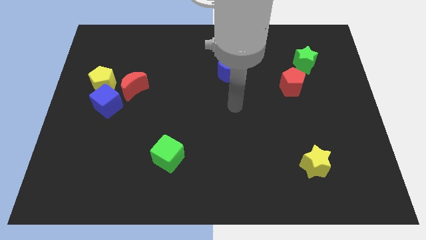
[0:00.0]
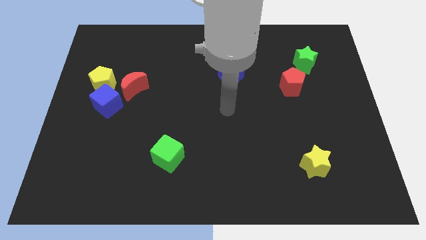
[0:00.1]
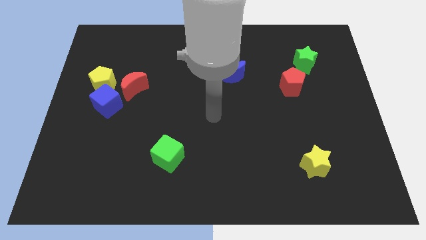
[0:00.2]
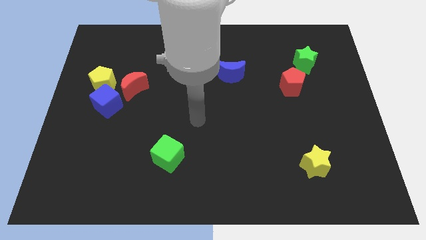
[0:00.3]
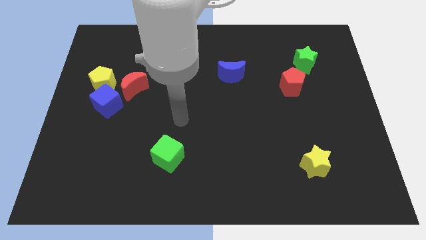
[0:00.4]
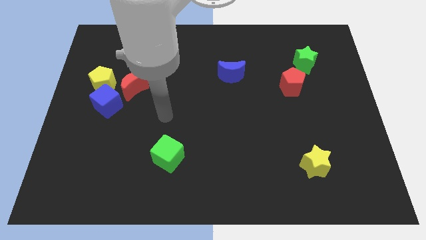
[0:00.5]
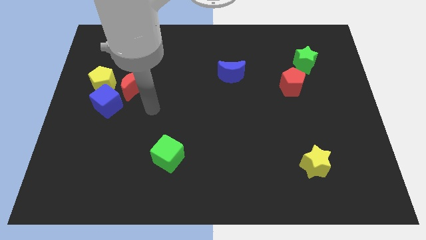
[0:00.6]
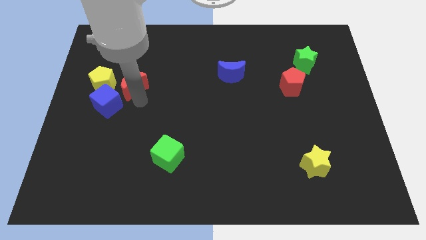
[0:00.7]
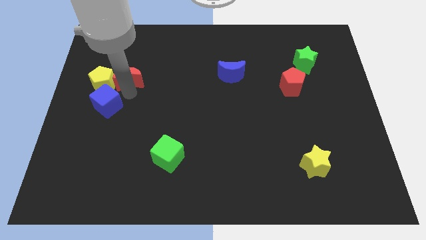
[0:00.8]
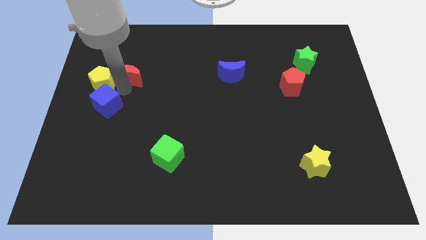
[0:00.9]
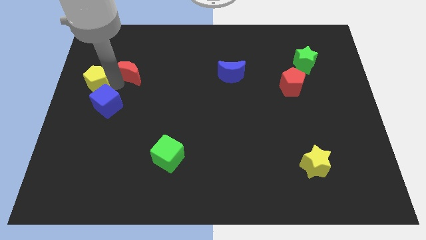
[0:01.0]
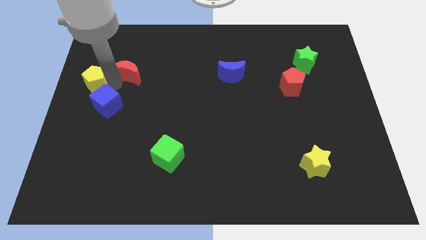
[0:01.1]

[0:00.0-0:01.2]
place your arm to the top left side of the blue cube

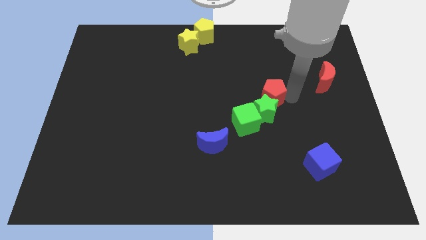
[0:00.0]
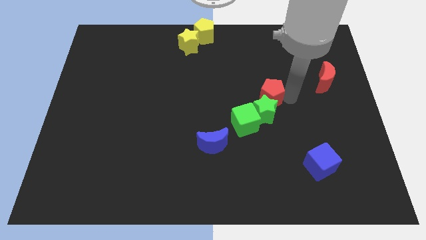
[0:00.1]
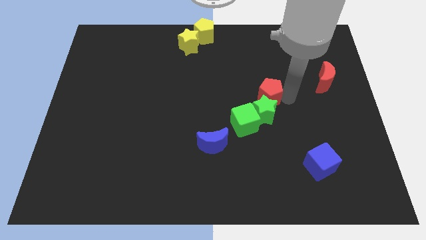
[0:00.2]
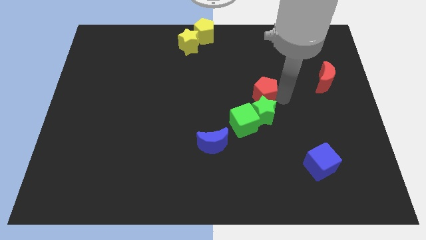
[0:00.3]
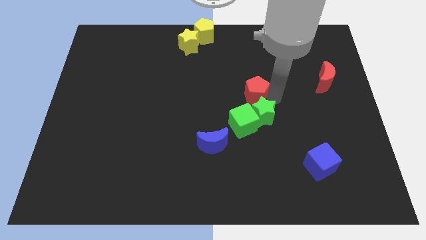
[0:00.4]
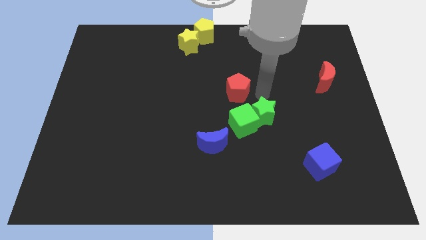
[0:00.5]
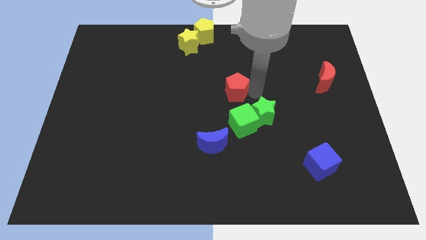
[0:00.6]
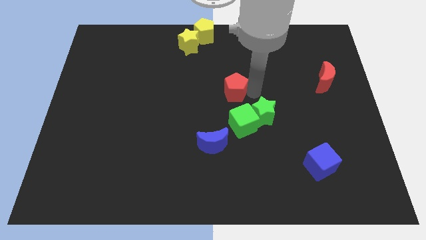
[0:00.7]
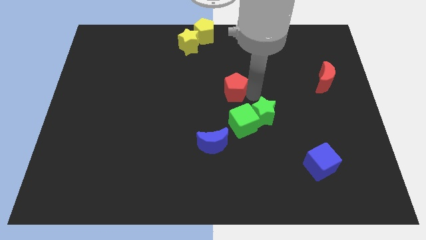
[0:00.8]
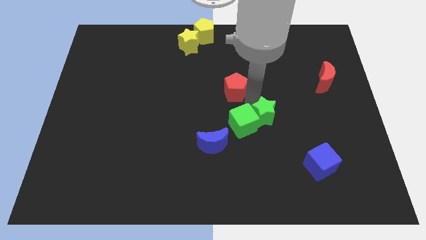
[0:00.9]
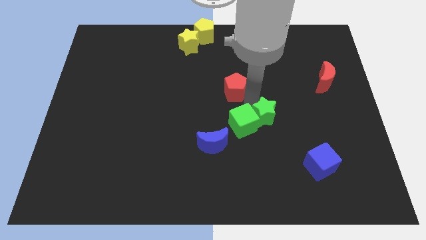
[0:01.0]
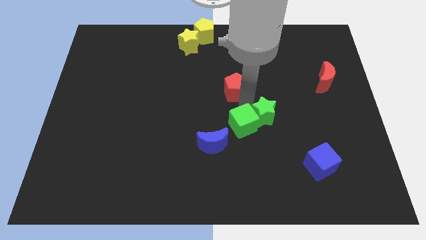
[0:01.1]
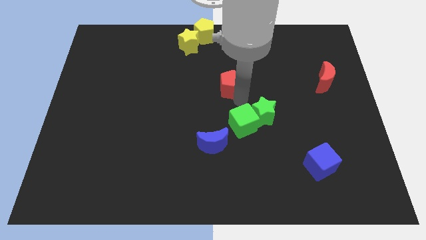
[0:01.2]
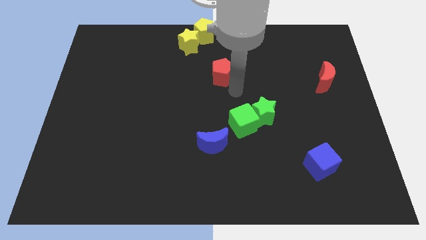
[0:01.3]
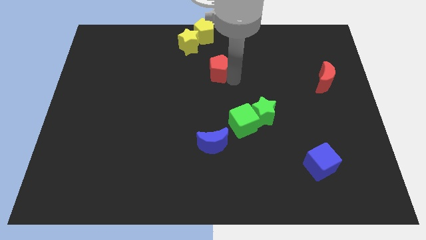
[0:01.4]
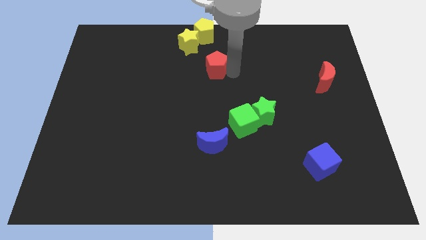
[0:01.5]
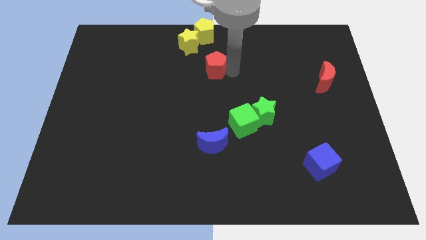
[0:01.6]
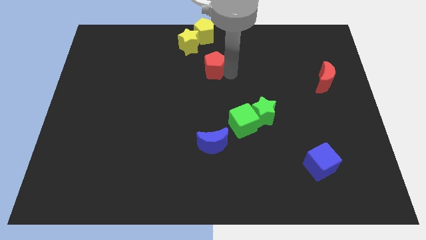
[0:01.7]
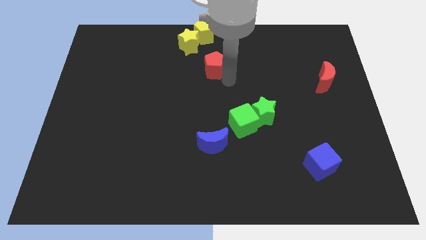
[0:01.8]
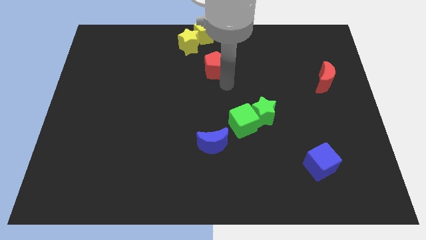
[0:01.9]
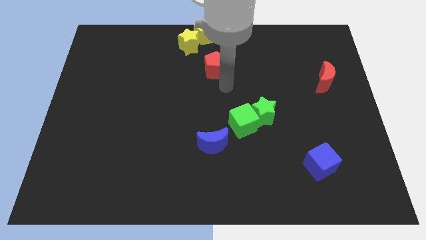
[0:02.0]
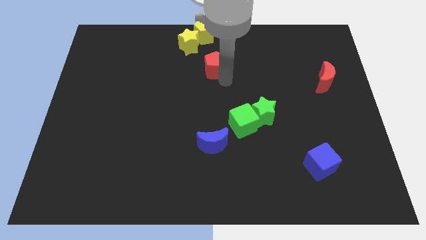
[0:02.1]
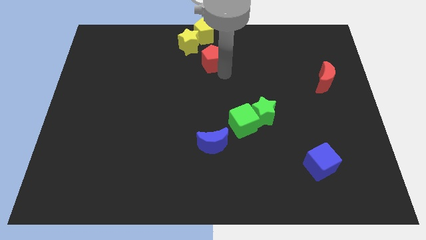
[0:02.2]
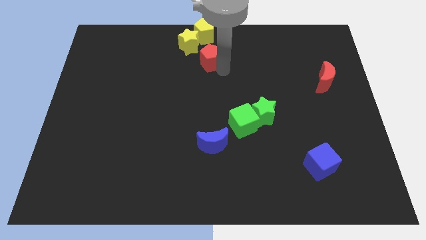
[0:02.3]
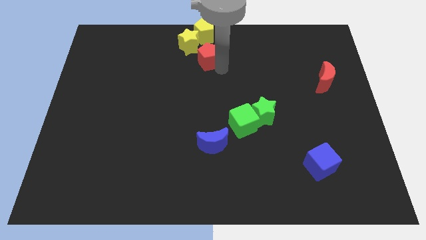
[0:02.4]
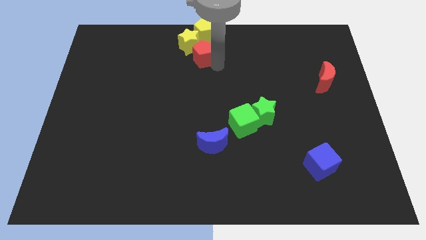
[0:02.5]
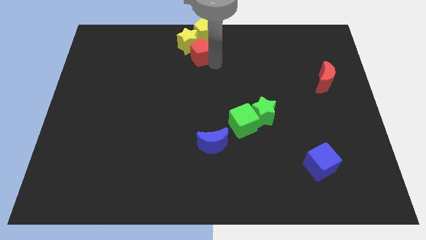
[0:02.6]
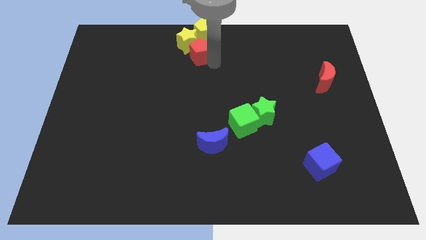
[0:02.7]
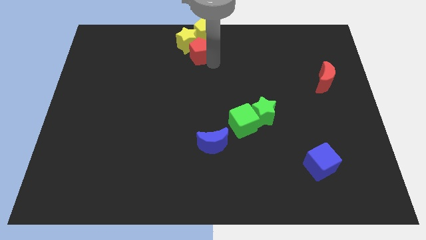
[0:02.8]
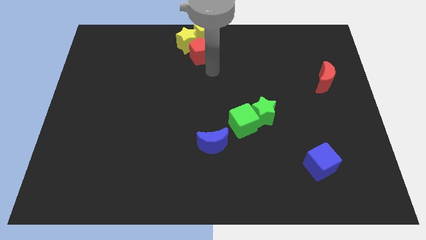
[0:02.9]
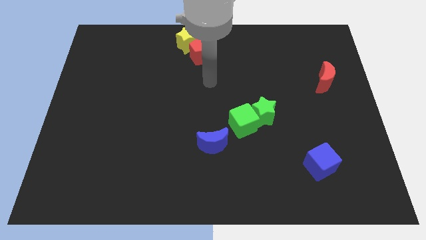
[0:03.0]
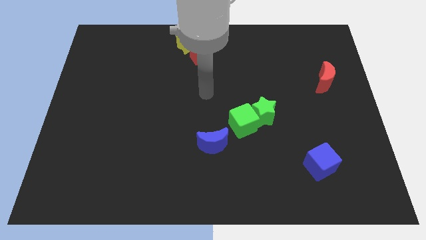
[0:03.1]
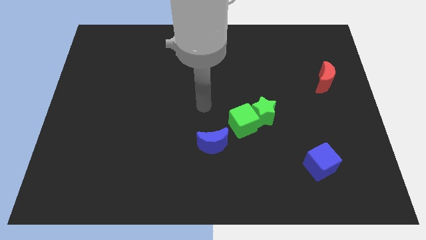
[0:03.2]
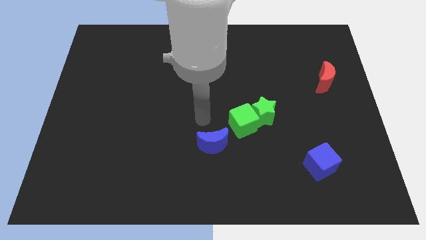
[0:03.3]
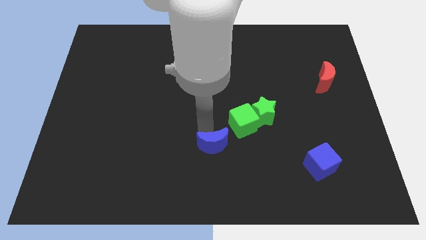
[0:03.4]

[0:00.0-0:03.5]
push red pentagon in to yellow star

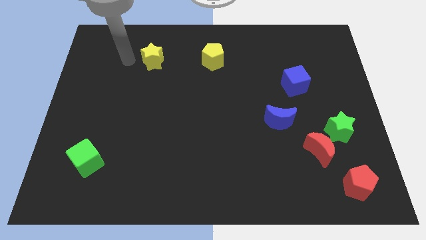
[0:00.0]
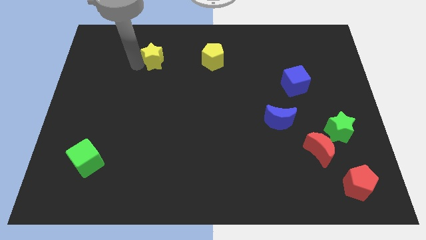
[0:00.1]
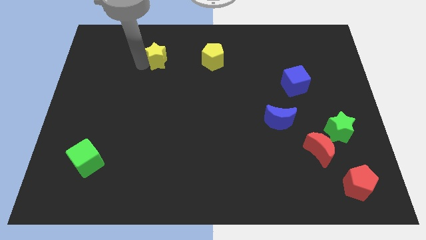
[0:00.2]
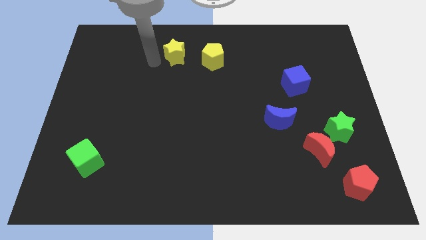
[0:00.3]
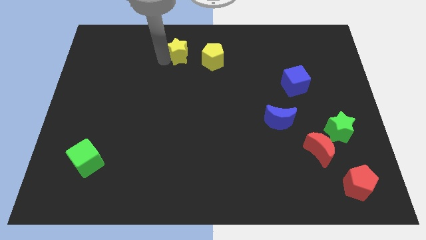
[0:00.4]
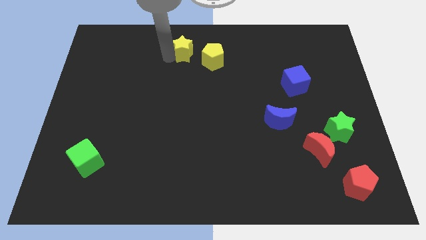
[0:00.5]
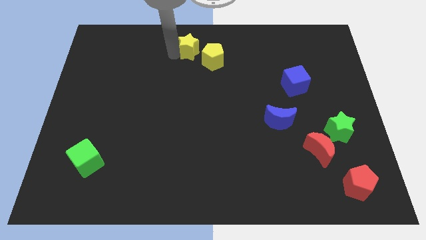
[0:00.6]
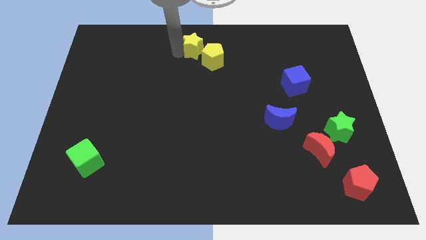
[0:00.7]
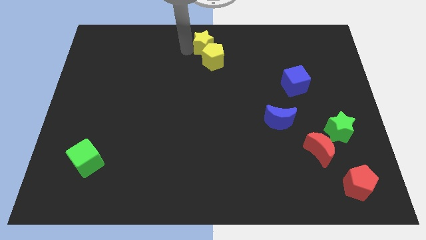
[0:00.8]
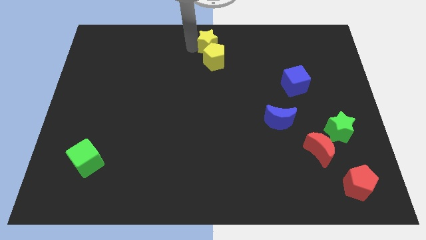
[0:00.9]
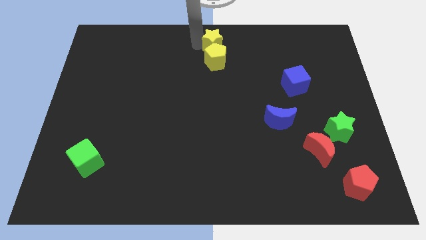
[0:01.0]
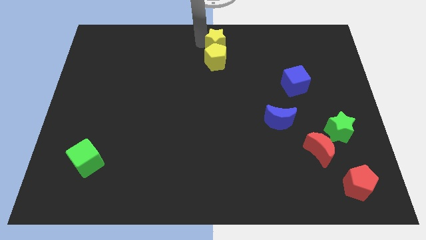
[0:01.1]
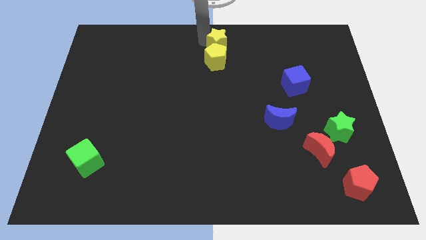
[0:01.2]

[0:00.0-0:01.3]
place the yellow star at the top of the yellow pentagon

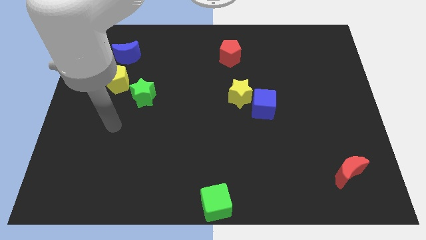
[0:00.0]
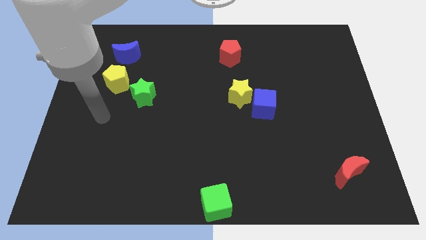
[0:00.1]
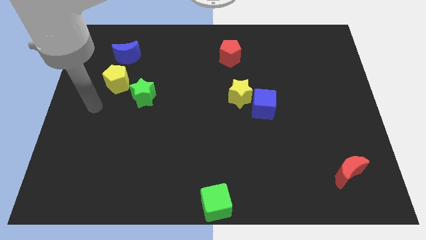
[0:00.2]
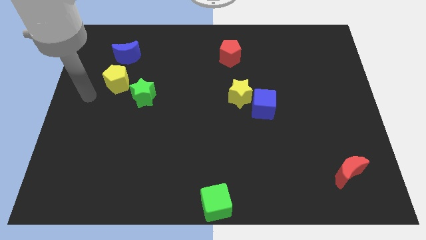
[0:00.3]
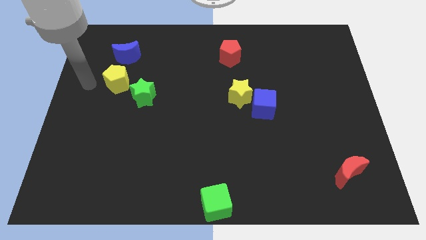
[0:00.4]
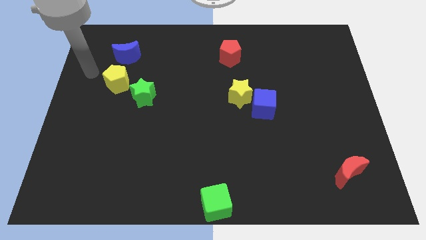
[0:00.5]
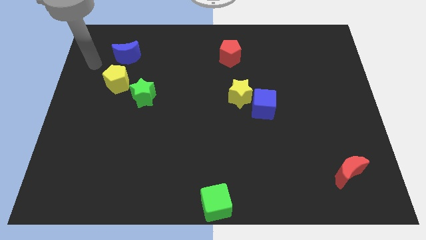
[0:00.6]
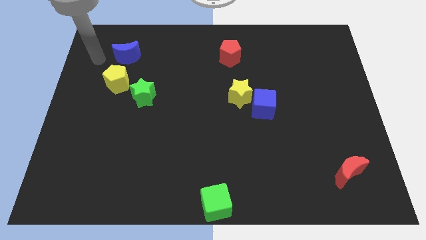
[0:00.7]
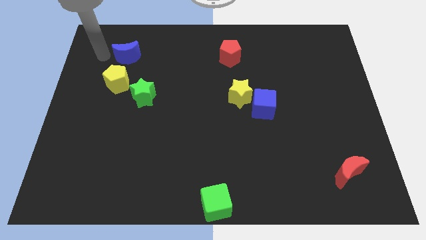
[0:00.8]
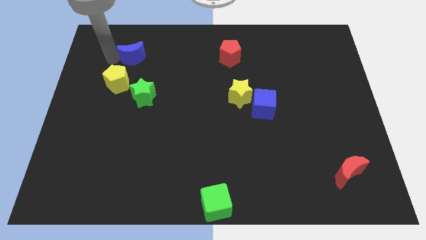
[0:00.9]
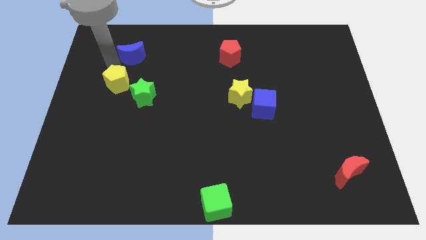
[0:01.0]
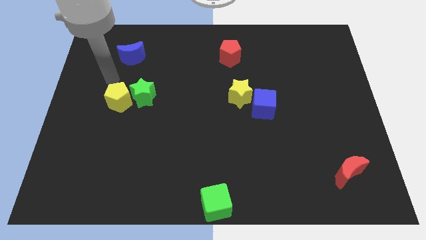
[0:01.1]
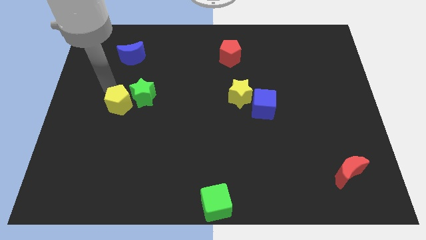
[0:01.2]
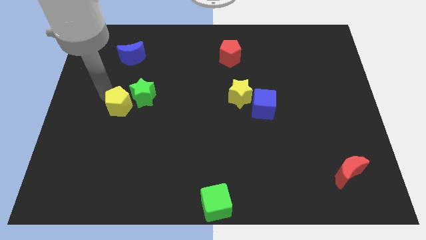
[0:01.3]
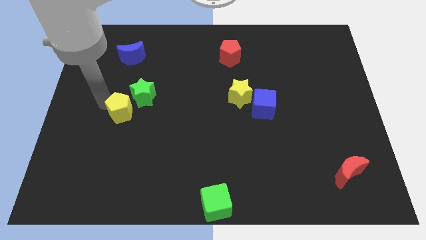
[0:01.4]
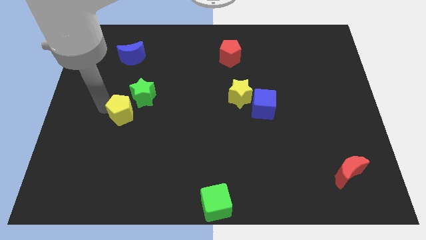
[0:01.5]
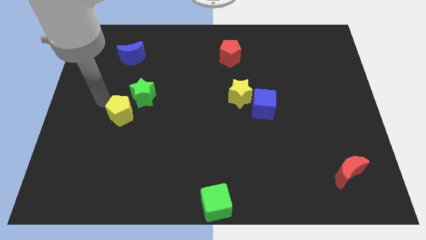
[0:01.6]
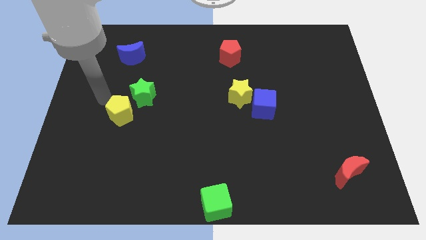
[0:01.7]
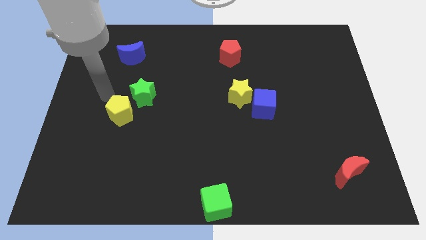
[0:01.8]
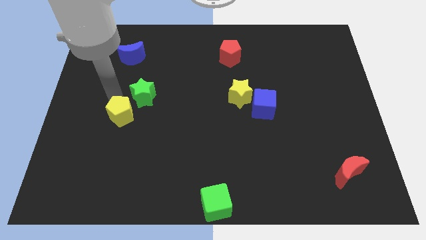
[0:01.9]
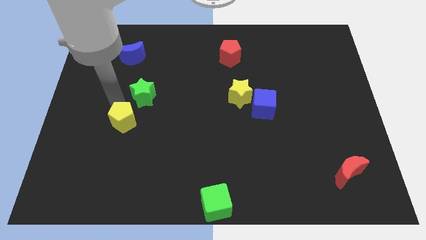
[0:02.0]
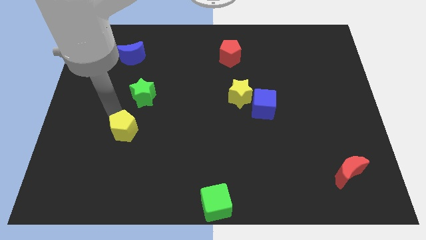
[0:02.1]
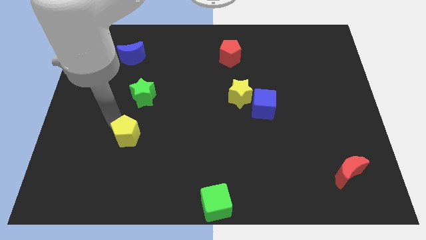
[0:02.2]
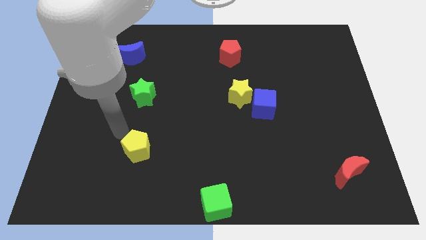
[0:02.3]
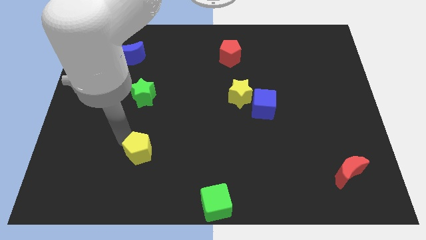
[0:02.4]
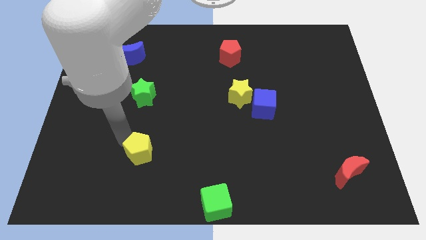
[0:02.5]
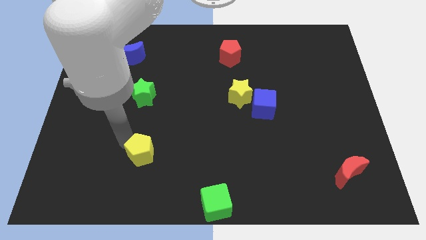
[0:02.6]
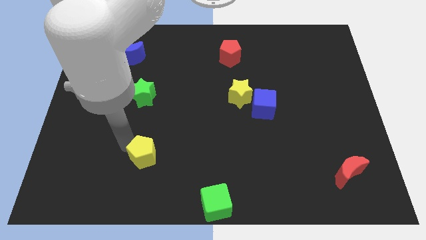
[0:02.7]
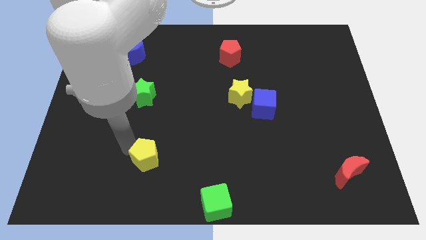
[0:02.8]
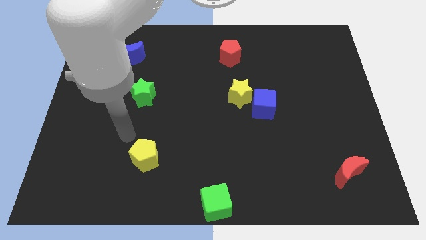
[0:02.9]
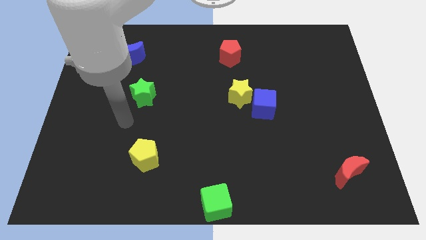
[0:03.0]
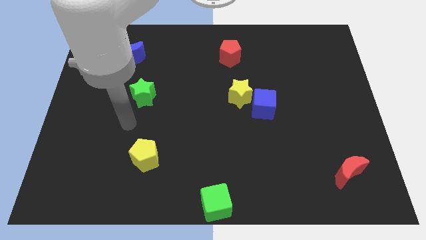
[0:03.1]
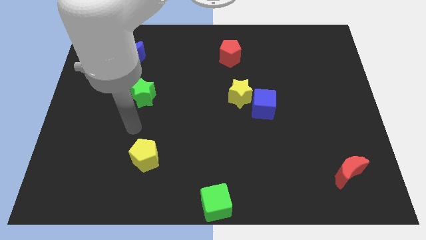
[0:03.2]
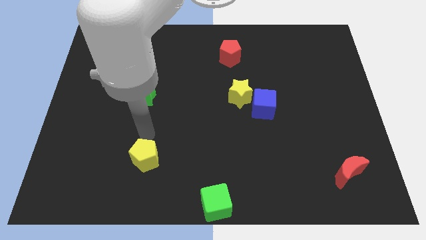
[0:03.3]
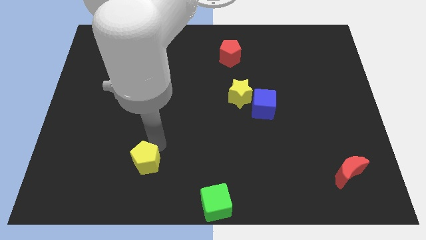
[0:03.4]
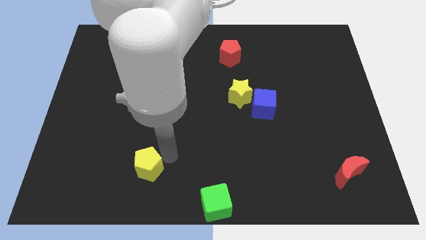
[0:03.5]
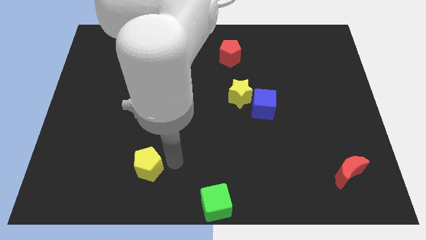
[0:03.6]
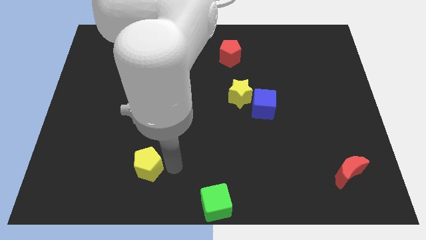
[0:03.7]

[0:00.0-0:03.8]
push the yellow pentagon to the bottom of the board
